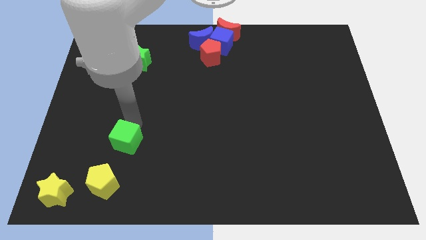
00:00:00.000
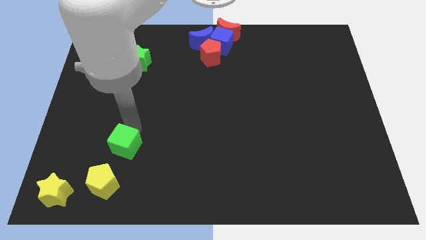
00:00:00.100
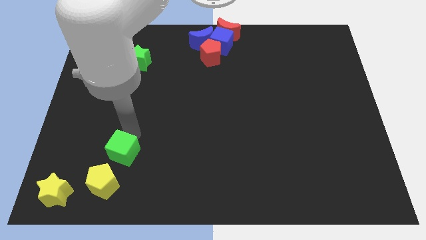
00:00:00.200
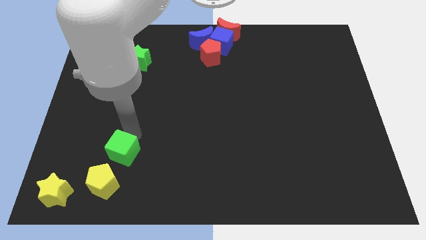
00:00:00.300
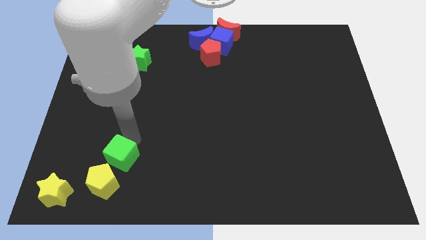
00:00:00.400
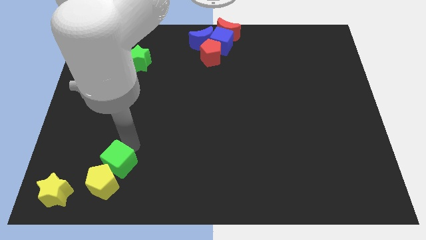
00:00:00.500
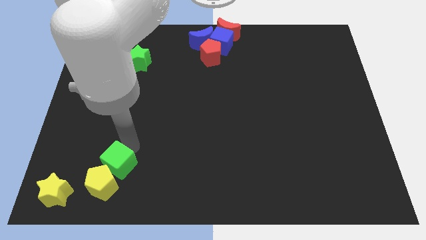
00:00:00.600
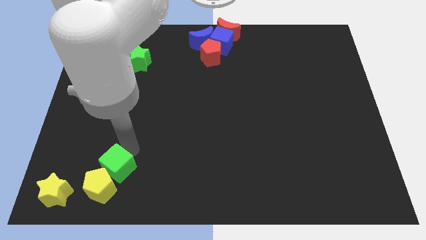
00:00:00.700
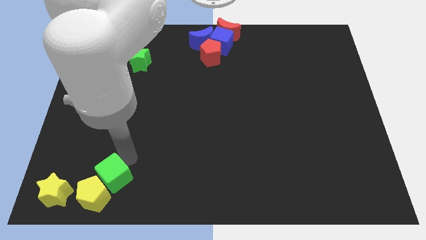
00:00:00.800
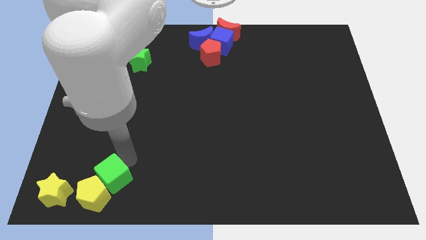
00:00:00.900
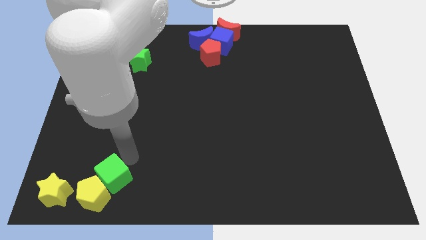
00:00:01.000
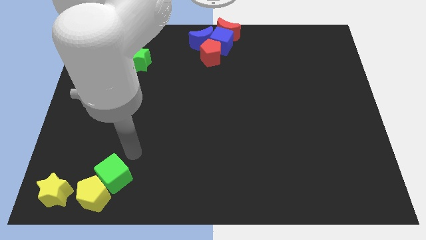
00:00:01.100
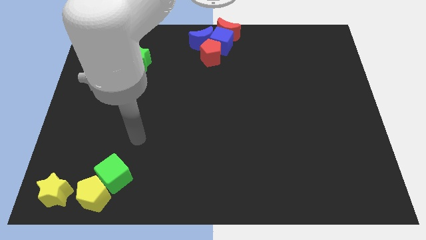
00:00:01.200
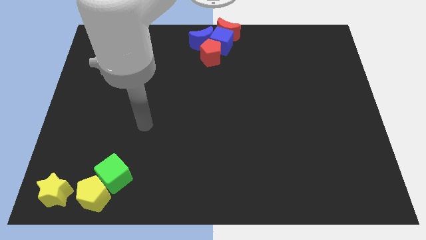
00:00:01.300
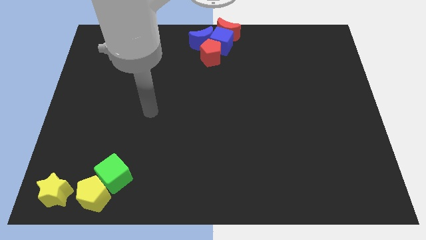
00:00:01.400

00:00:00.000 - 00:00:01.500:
slide the green cube into the yellow pentagon

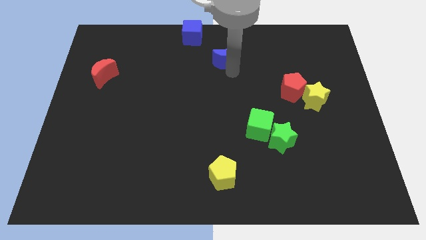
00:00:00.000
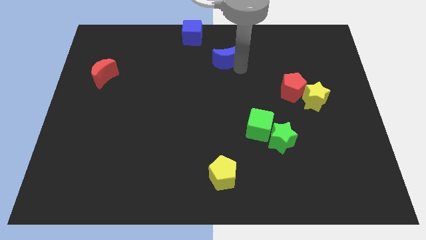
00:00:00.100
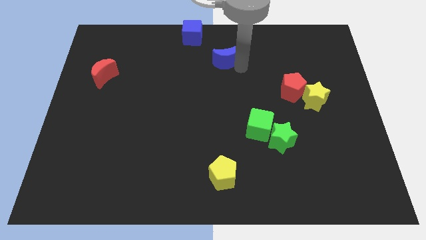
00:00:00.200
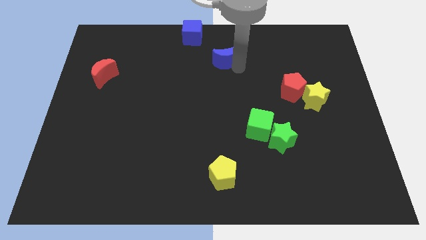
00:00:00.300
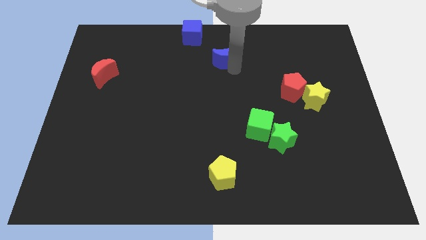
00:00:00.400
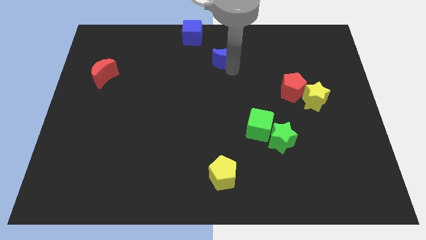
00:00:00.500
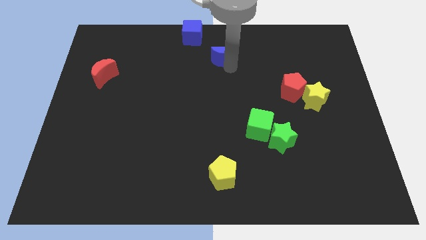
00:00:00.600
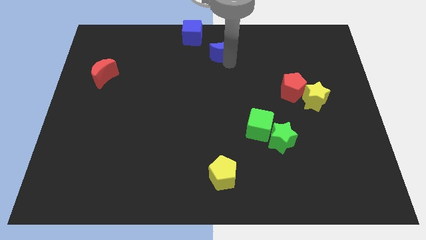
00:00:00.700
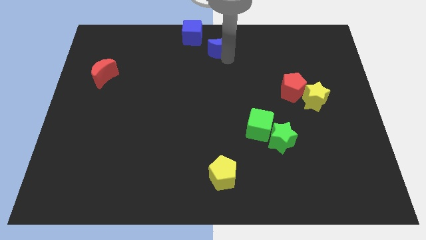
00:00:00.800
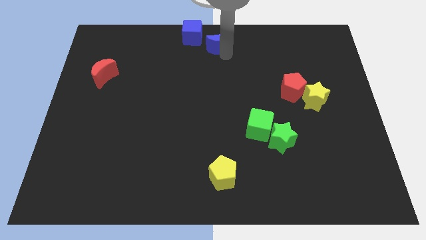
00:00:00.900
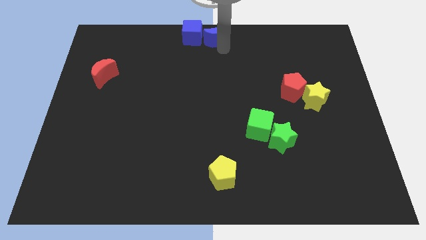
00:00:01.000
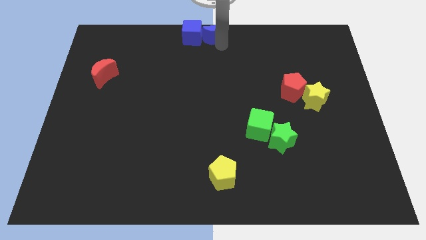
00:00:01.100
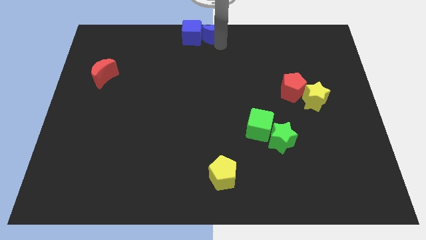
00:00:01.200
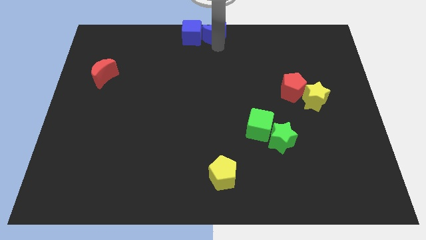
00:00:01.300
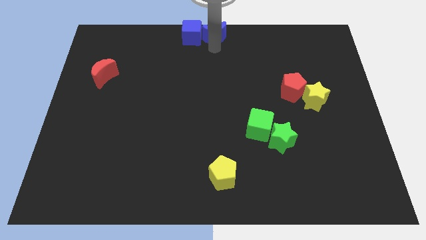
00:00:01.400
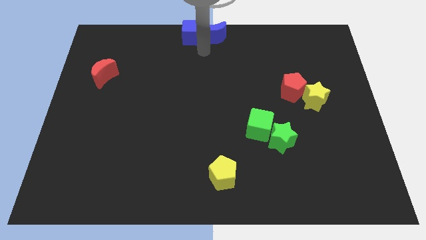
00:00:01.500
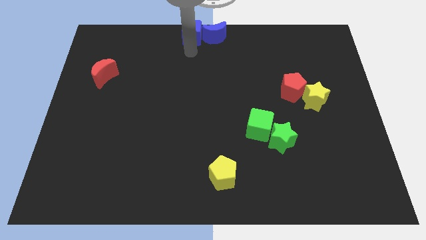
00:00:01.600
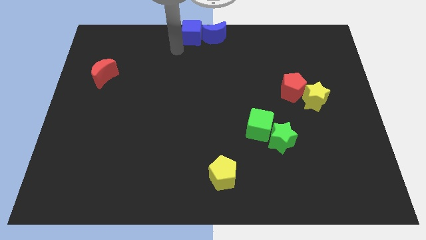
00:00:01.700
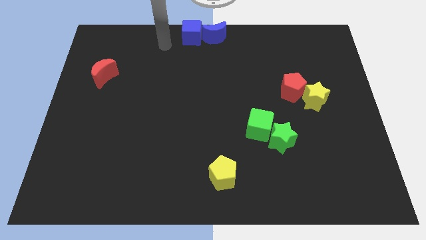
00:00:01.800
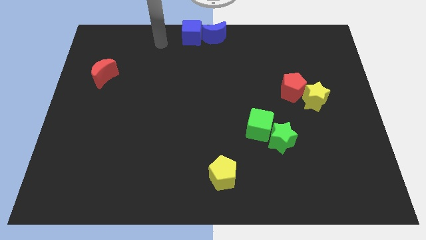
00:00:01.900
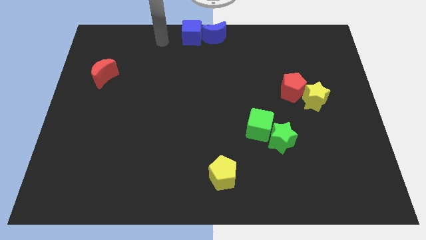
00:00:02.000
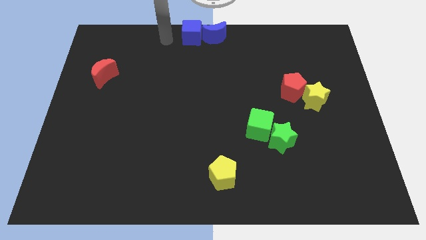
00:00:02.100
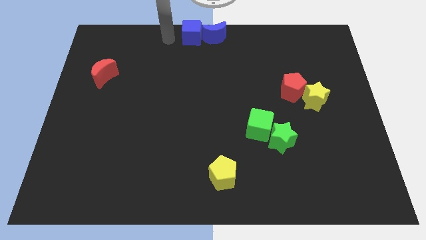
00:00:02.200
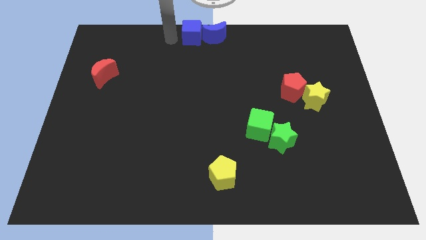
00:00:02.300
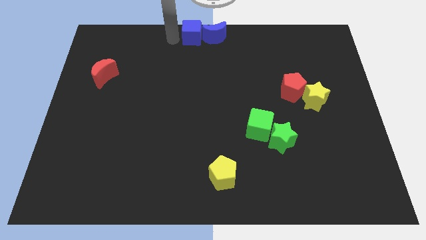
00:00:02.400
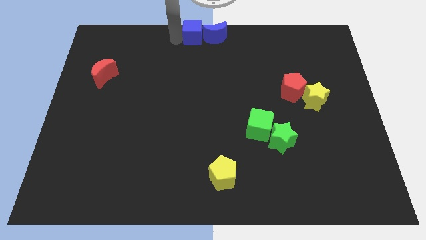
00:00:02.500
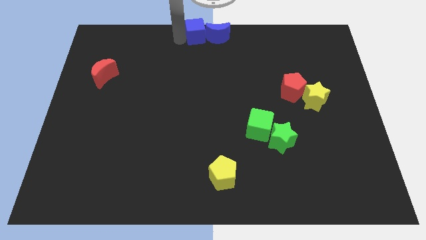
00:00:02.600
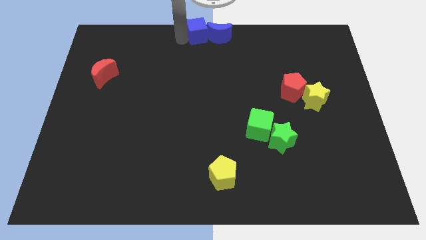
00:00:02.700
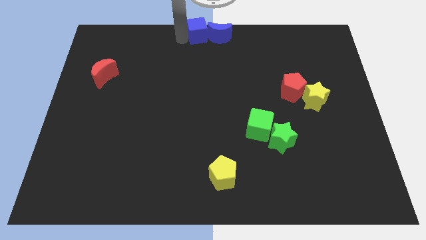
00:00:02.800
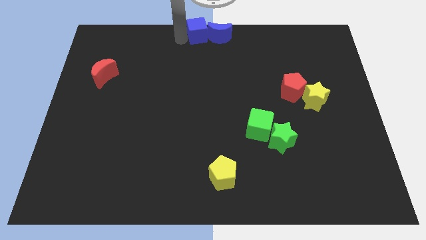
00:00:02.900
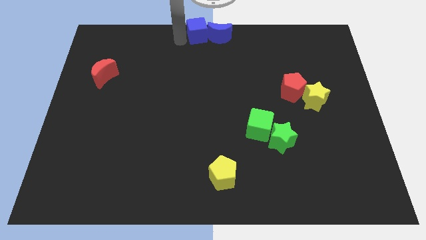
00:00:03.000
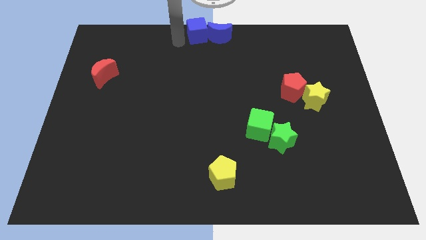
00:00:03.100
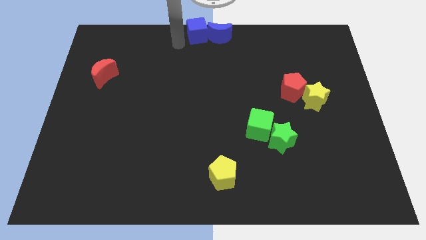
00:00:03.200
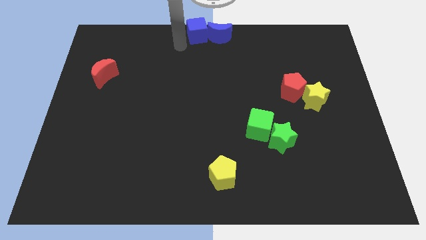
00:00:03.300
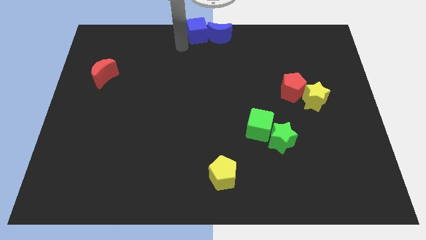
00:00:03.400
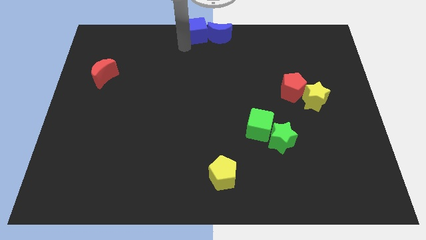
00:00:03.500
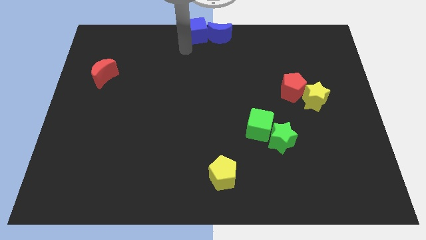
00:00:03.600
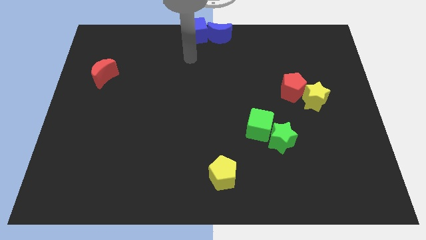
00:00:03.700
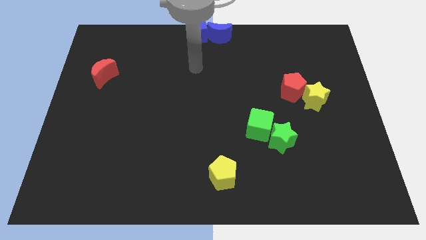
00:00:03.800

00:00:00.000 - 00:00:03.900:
move both the blue blocks at the top center of the board

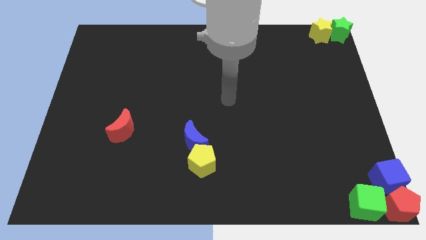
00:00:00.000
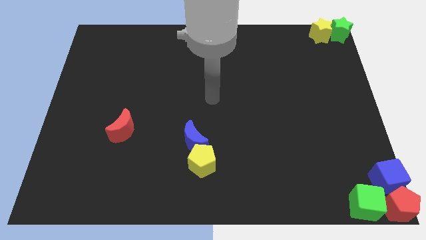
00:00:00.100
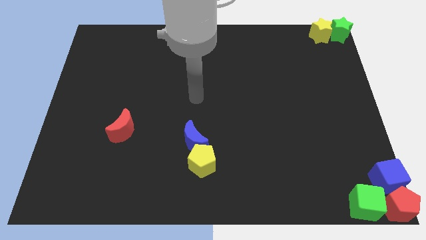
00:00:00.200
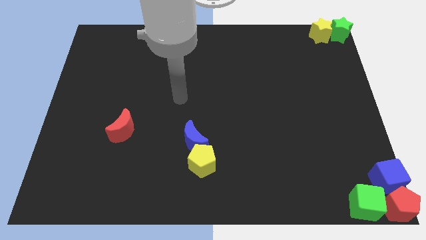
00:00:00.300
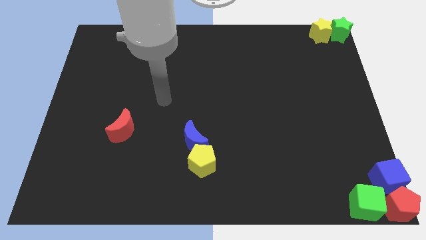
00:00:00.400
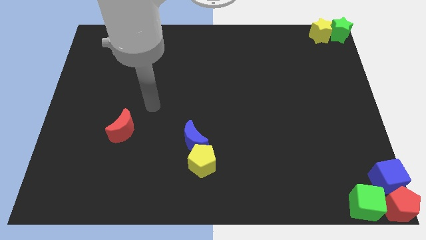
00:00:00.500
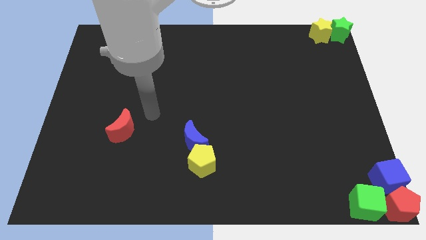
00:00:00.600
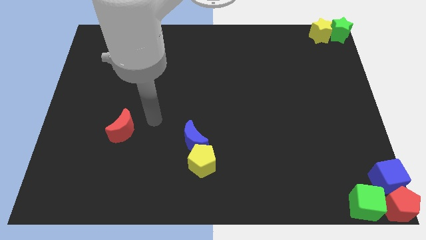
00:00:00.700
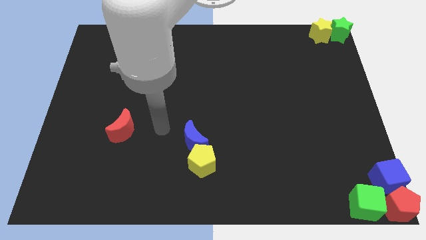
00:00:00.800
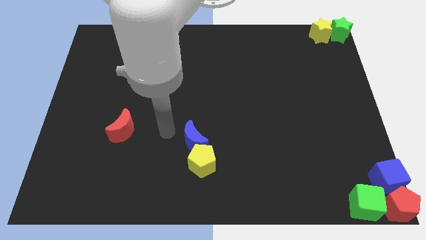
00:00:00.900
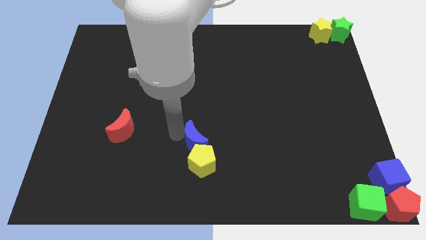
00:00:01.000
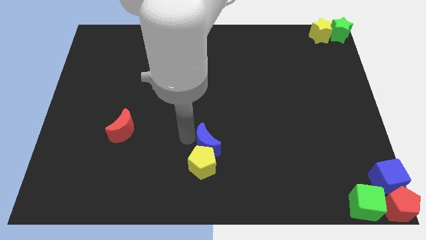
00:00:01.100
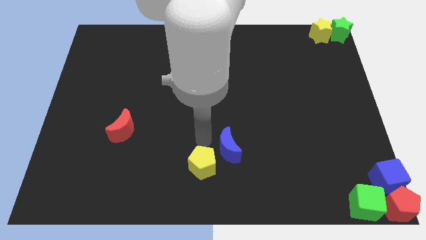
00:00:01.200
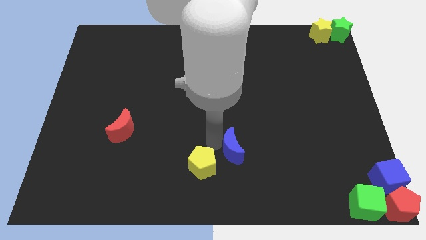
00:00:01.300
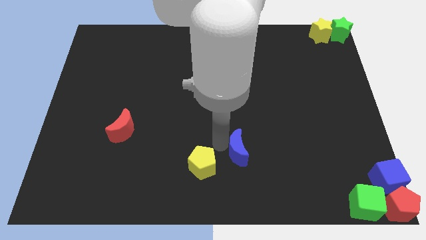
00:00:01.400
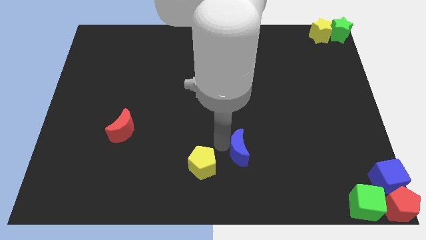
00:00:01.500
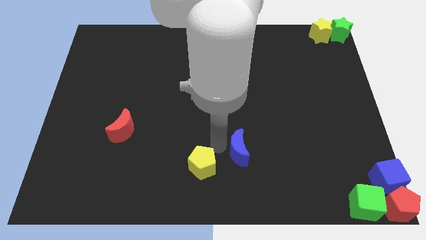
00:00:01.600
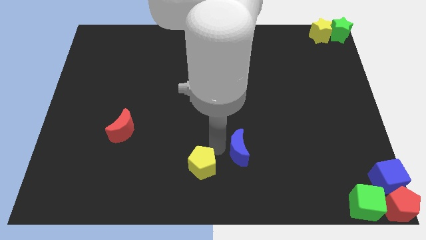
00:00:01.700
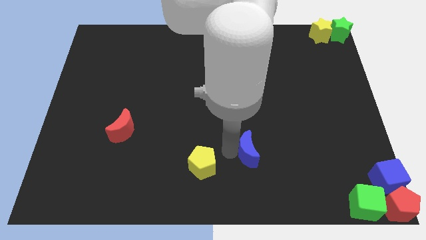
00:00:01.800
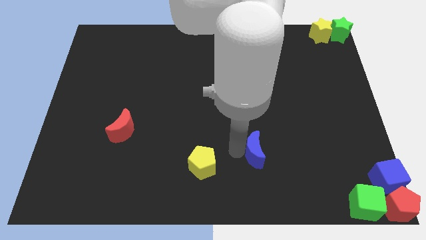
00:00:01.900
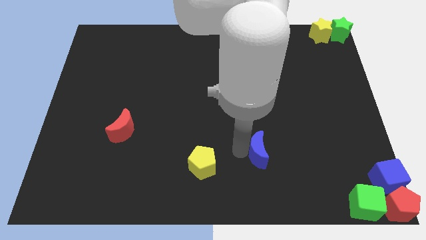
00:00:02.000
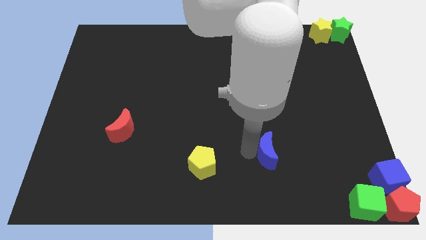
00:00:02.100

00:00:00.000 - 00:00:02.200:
separate the blue moon from the yellow pentagon

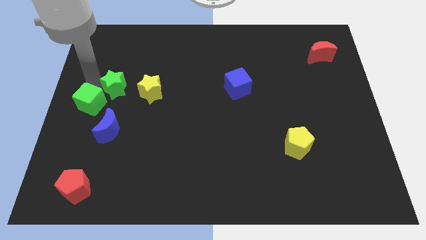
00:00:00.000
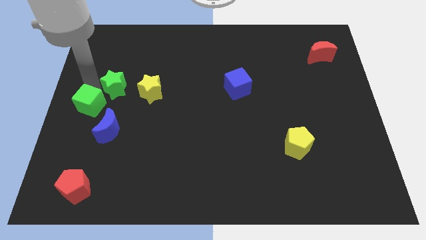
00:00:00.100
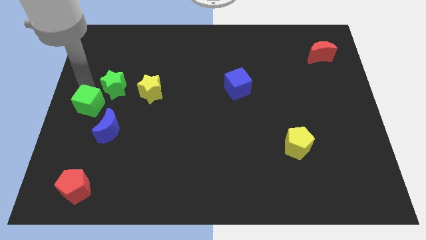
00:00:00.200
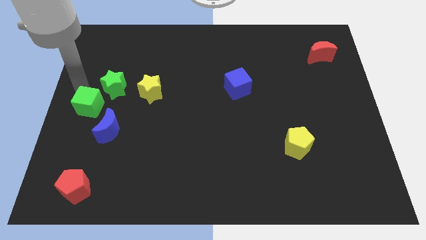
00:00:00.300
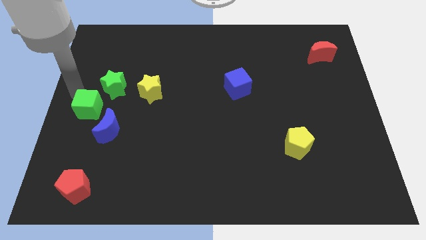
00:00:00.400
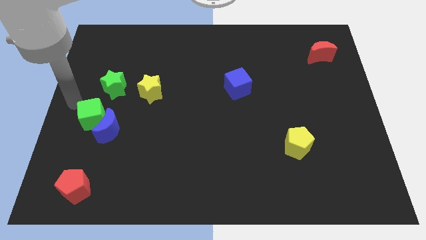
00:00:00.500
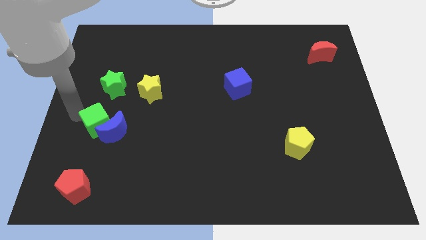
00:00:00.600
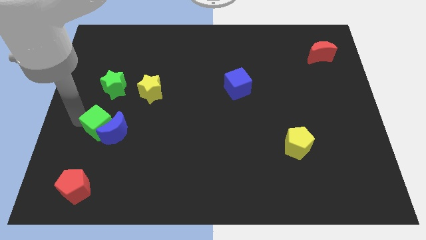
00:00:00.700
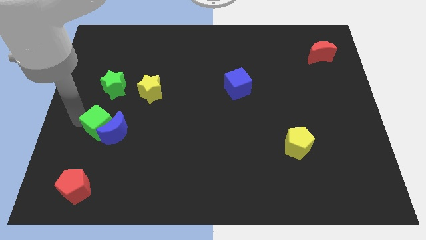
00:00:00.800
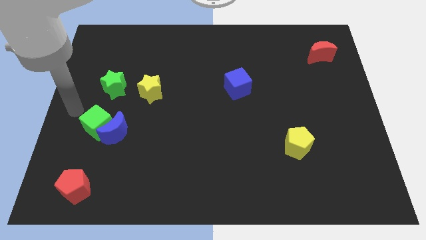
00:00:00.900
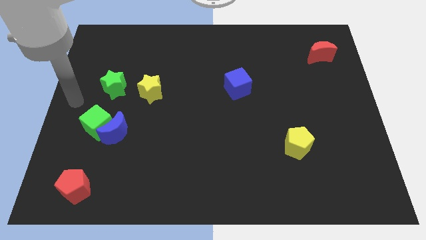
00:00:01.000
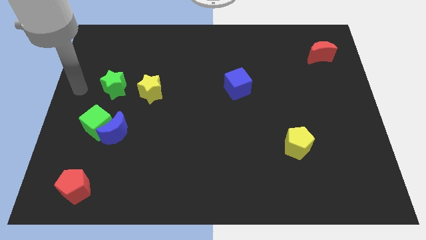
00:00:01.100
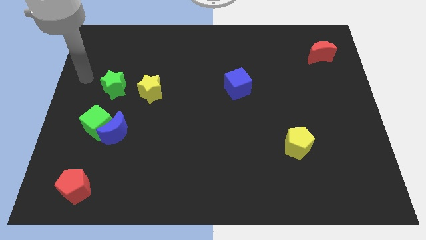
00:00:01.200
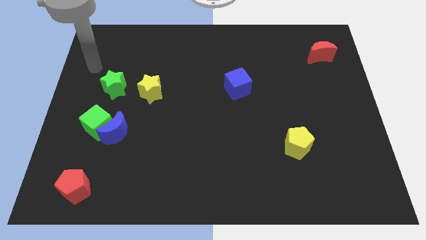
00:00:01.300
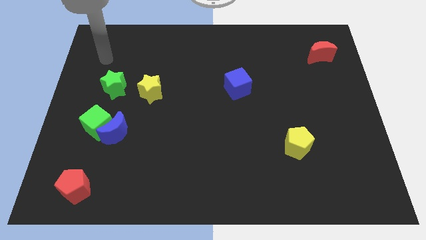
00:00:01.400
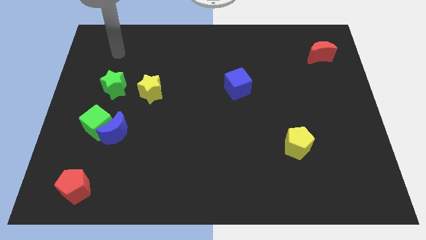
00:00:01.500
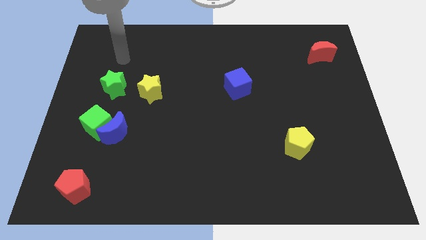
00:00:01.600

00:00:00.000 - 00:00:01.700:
push the green cube into the blue moon

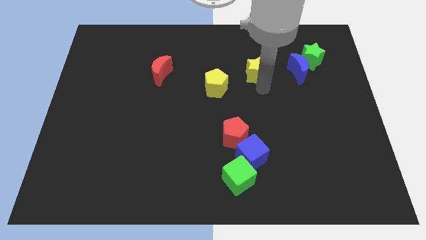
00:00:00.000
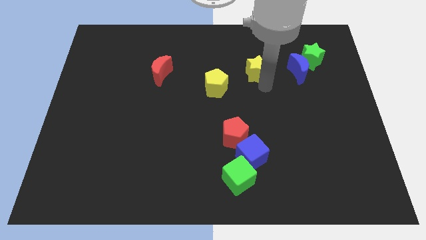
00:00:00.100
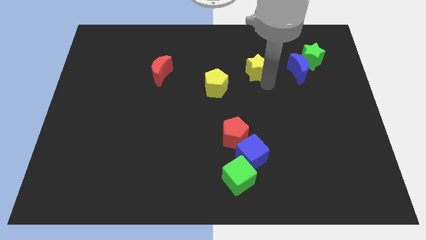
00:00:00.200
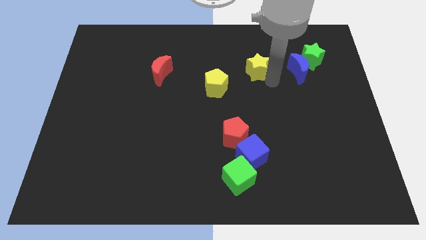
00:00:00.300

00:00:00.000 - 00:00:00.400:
slightly push the yellow star towards the top center of the board
